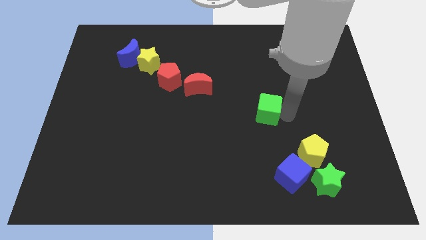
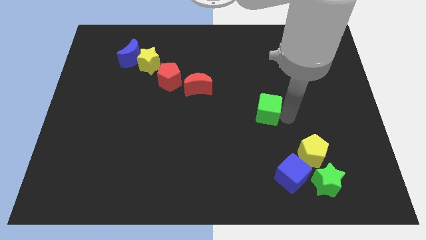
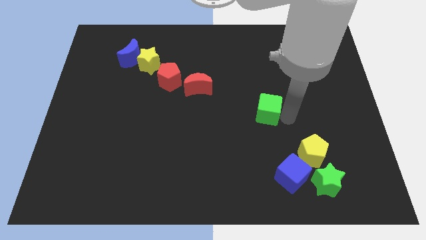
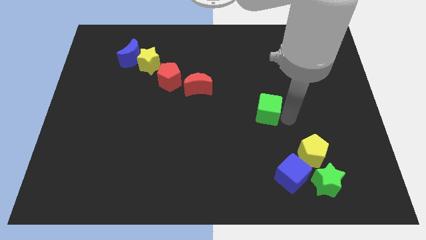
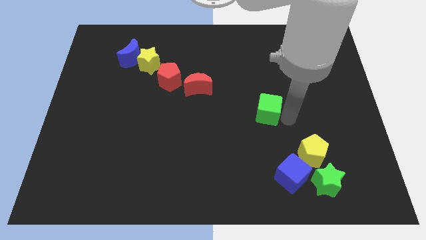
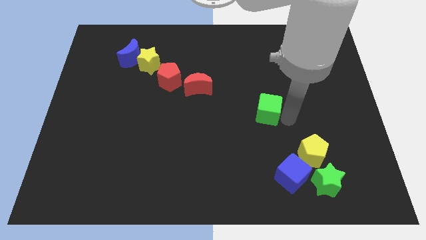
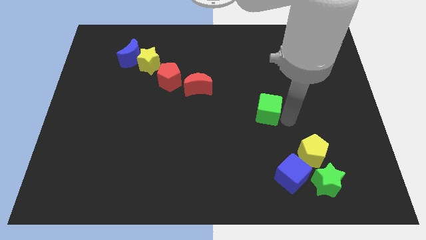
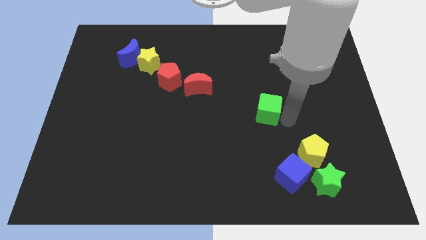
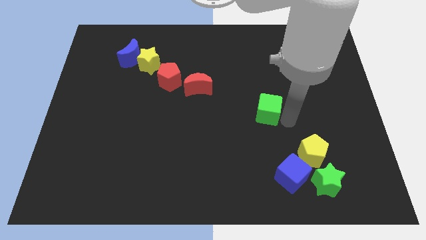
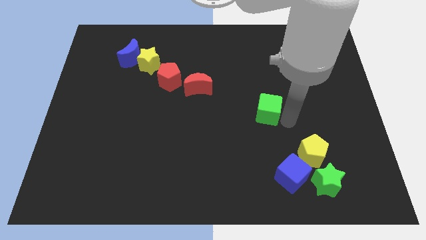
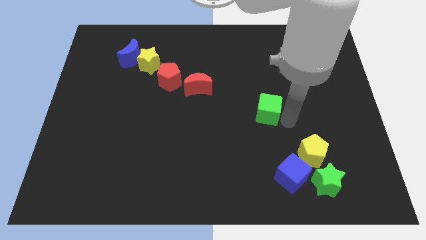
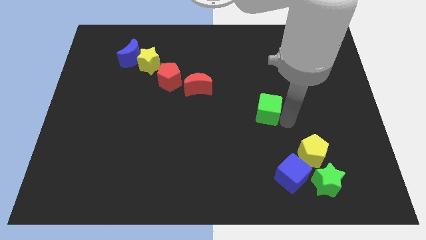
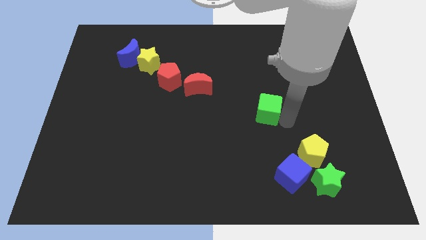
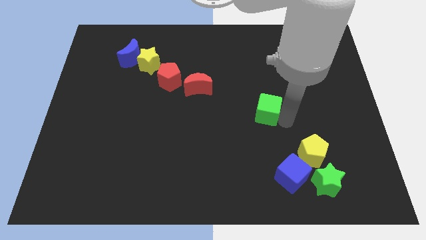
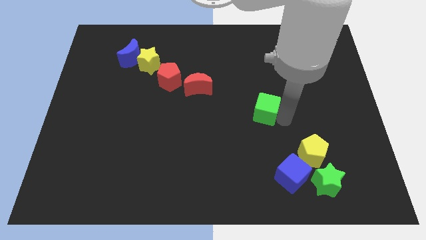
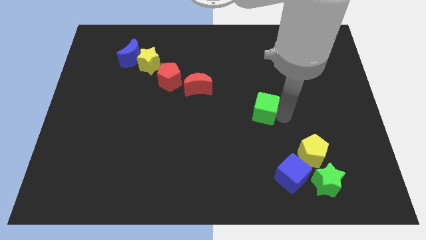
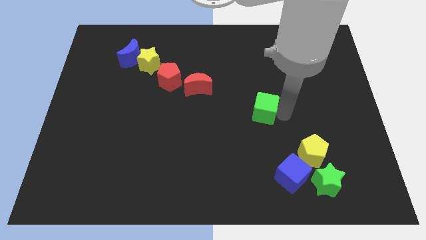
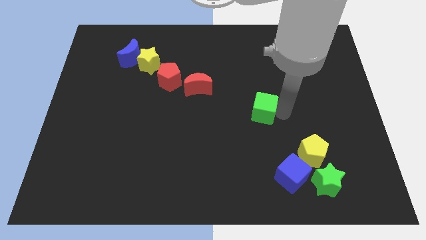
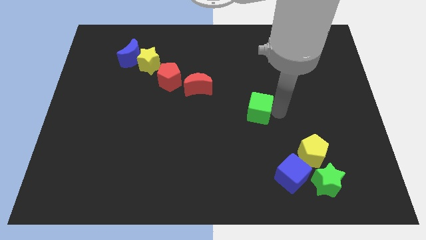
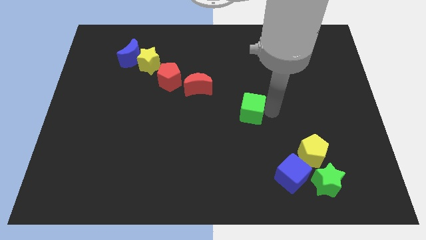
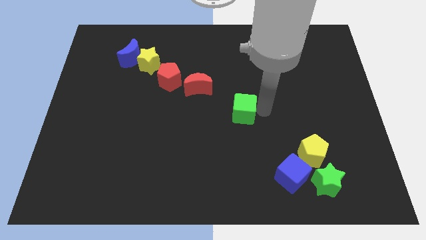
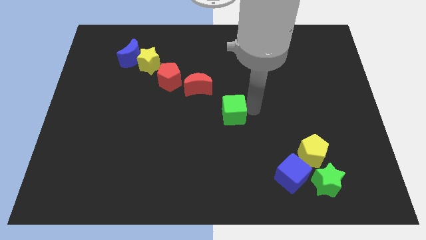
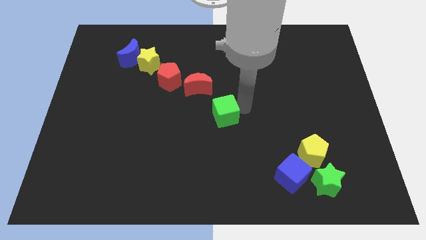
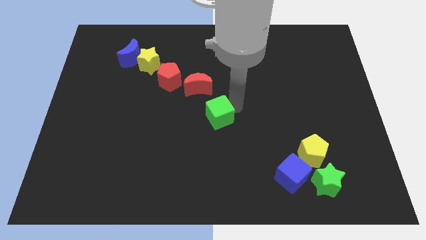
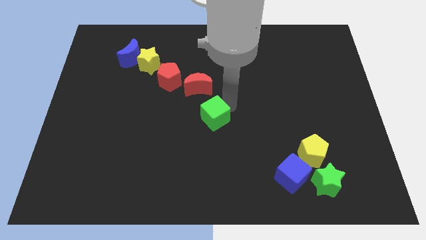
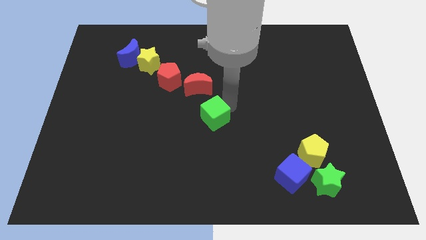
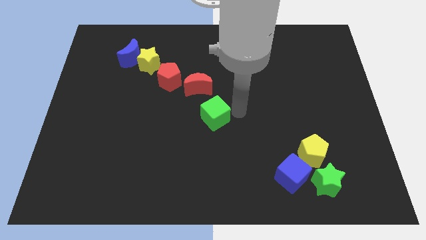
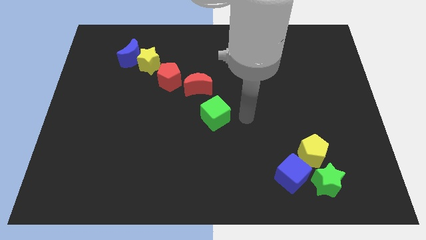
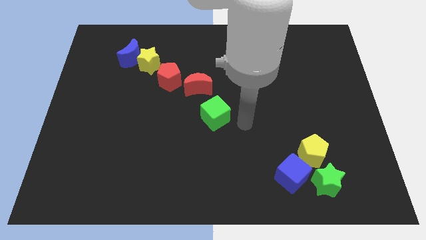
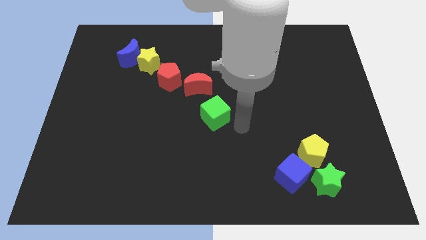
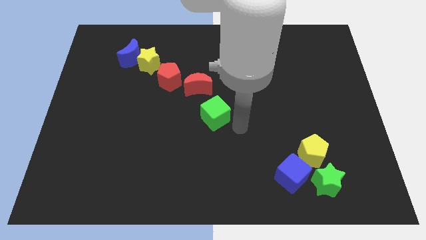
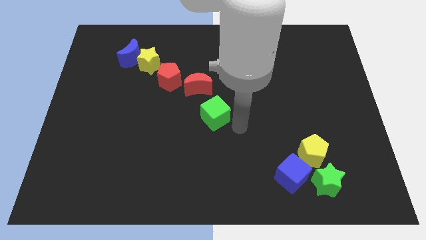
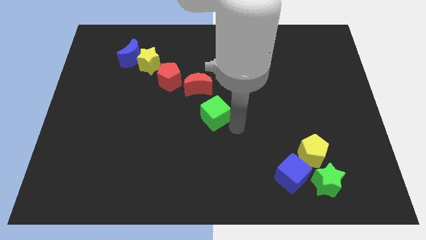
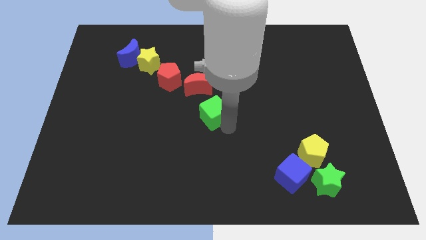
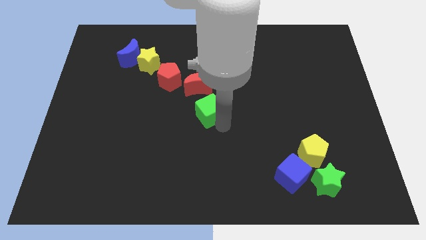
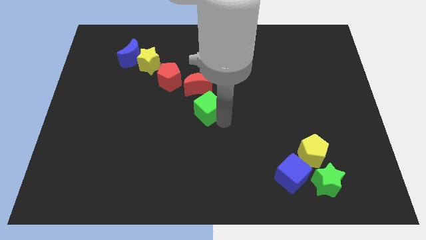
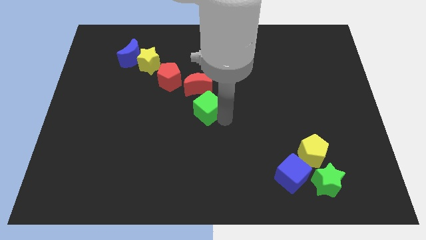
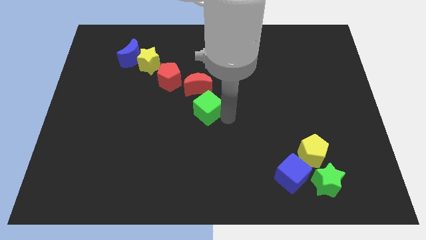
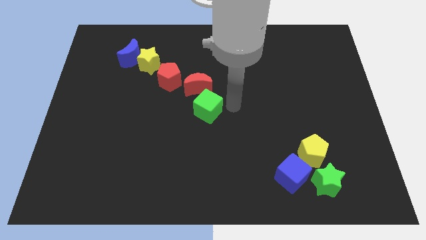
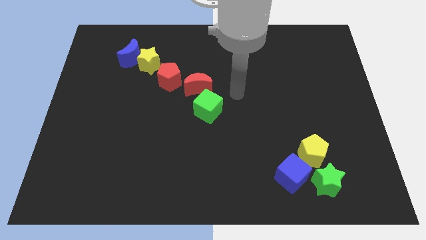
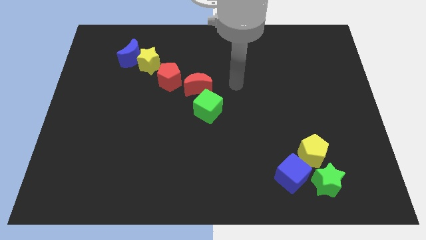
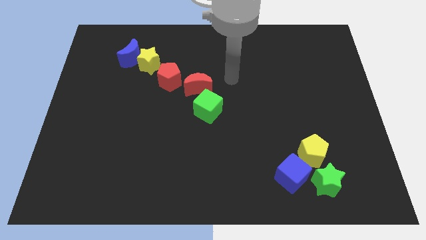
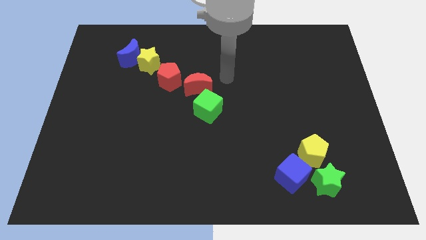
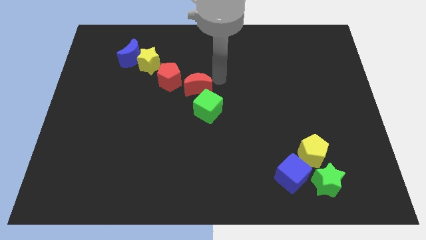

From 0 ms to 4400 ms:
place the green cube diagonal to the red pentagon

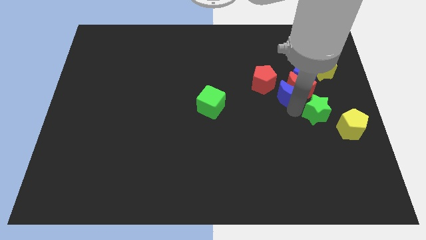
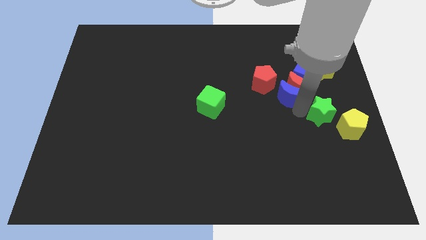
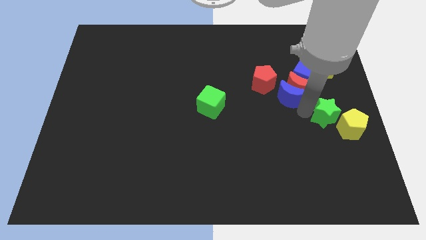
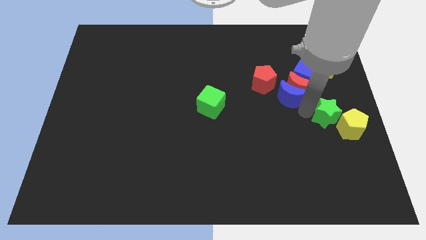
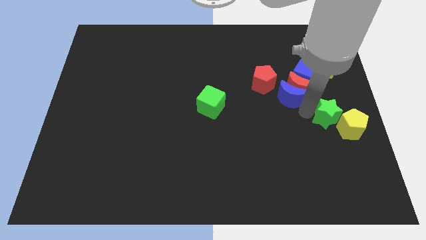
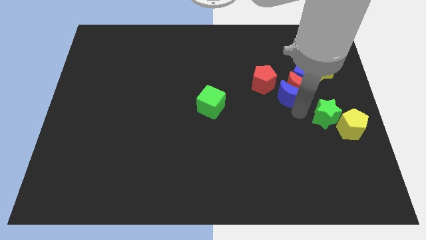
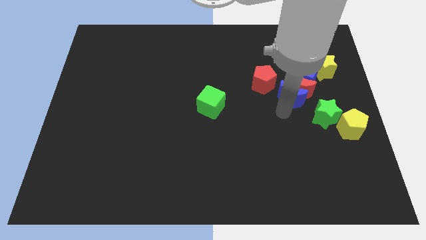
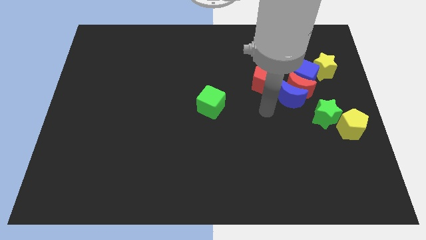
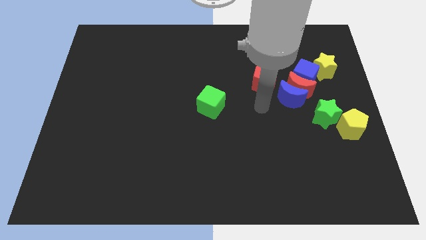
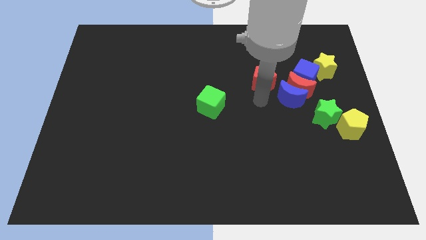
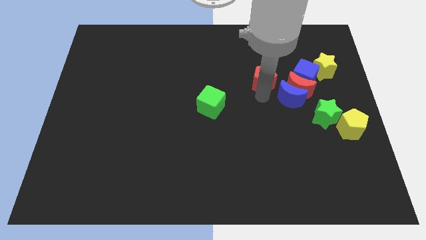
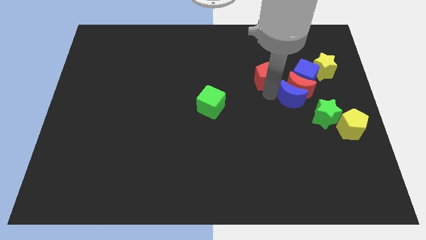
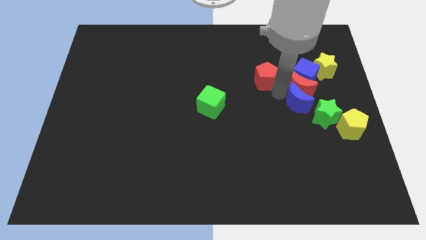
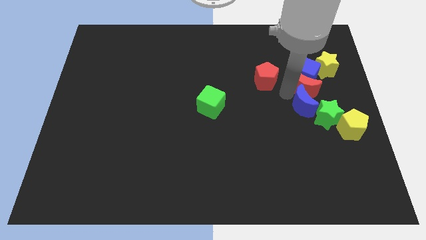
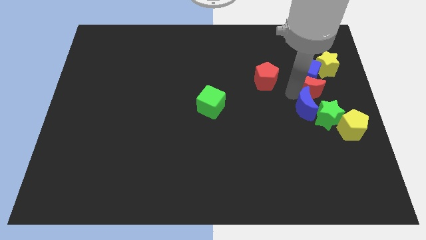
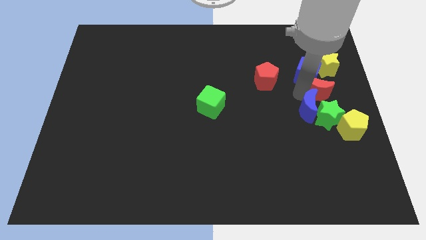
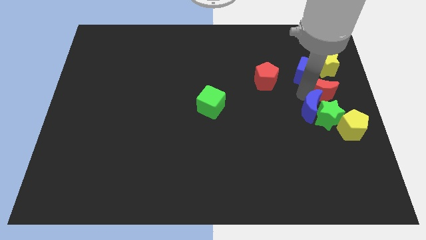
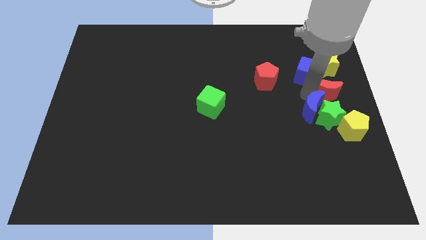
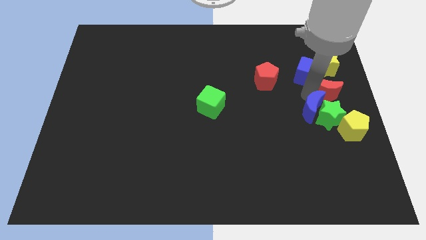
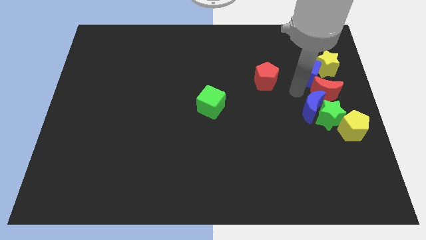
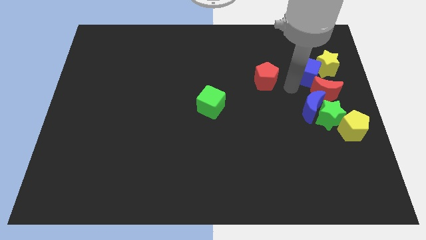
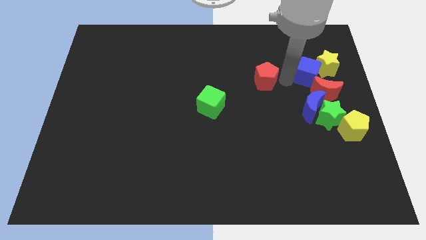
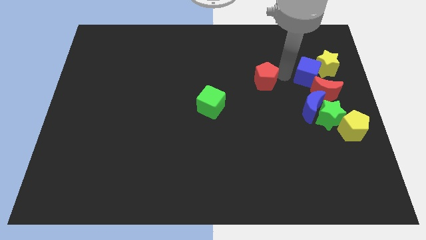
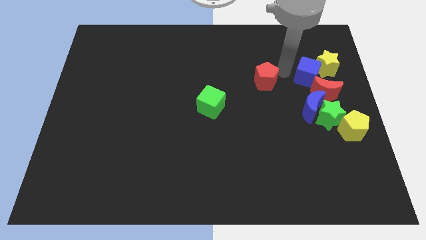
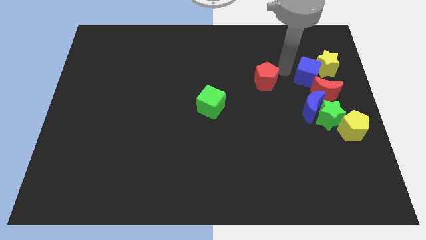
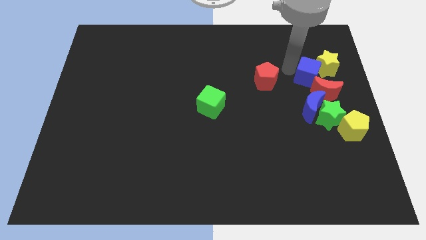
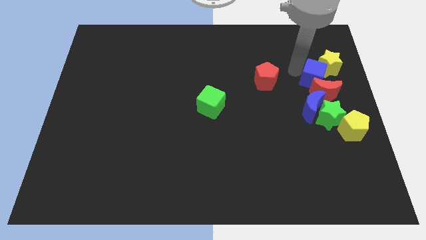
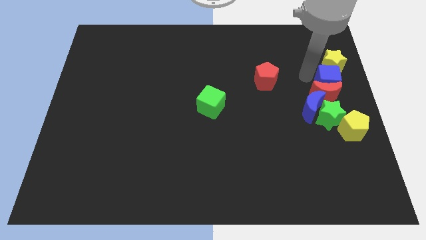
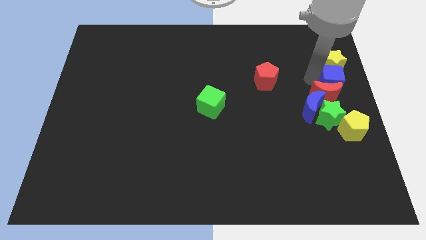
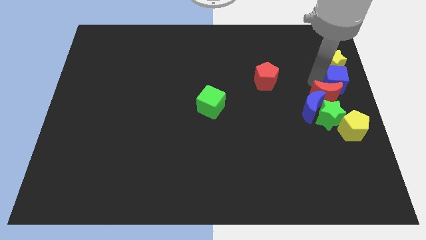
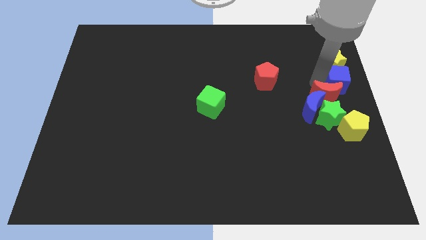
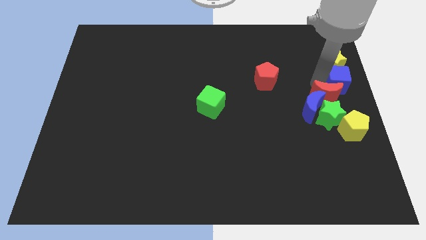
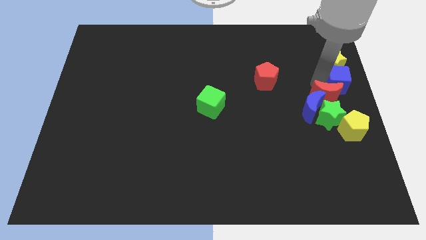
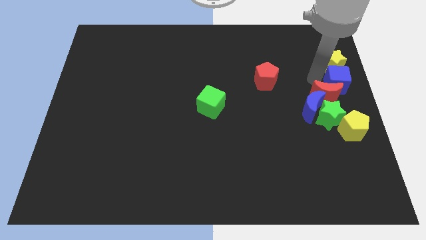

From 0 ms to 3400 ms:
slightly push the group of blocks to the right

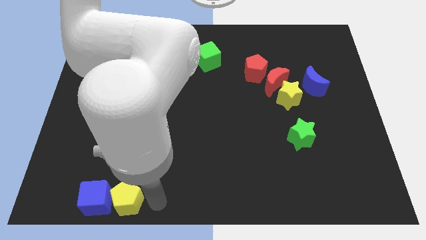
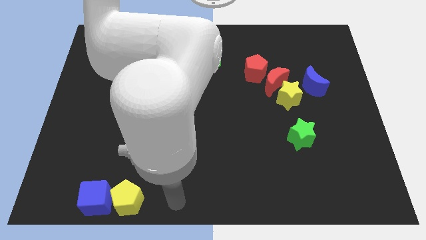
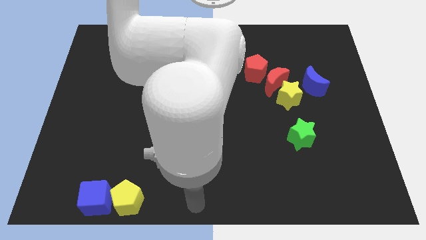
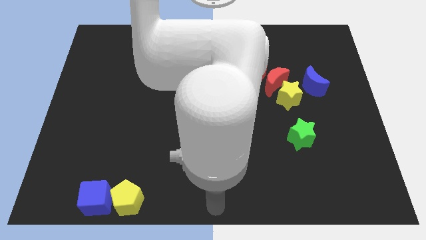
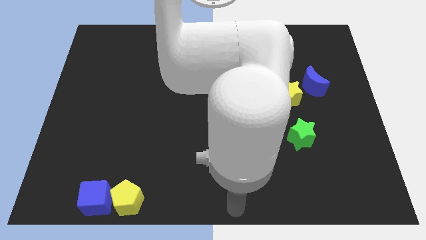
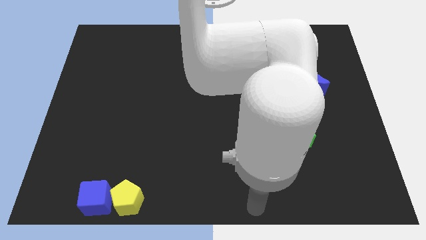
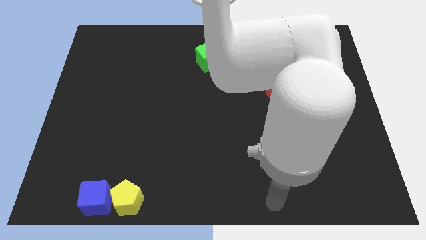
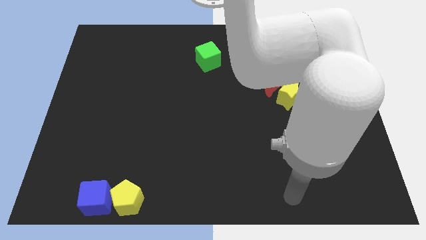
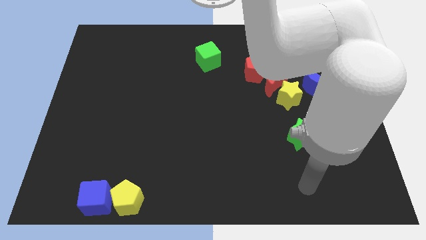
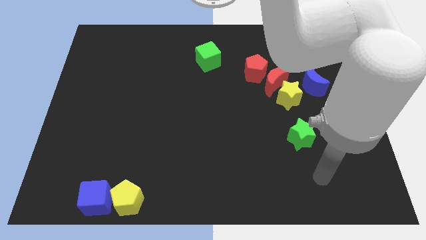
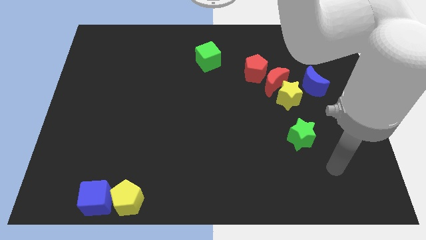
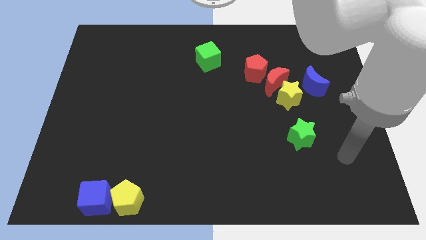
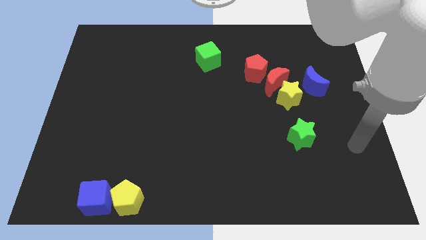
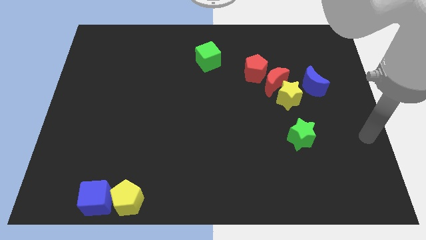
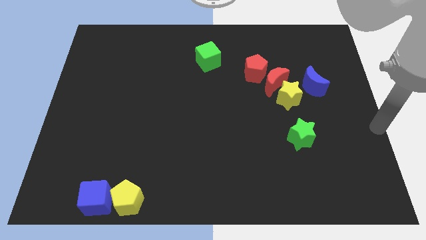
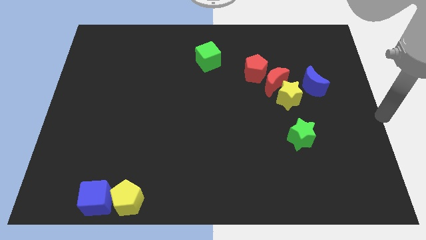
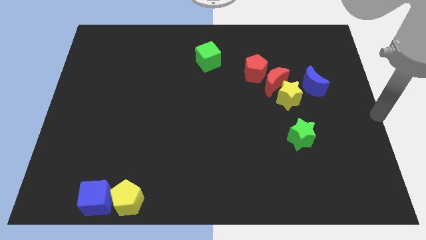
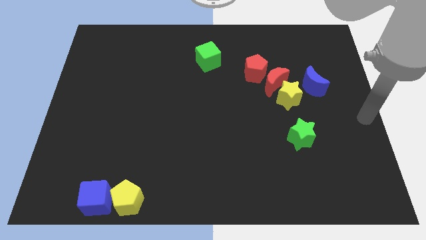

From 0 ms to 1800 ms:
move your arm up and to the right
